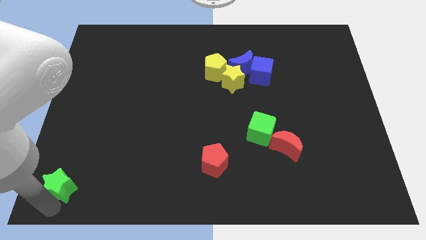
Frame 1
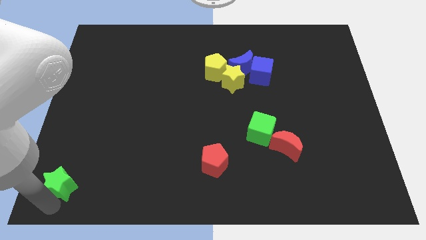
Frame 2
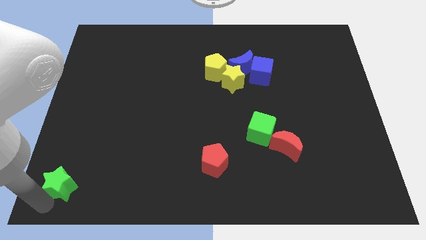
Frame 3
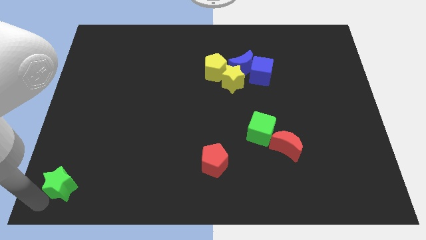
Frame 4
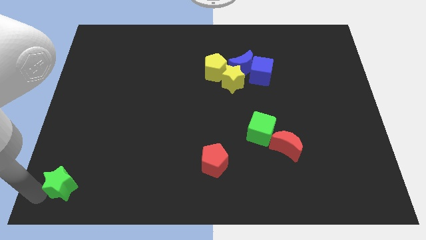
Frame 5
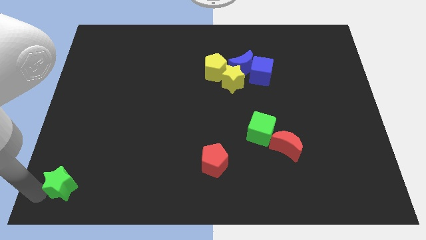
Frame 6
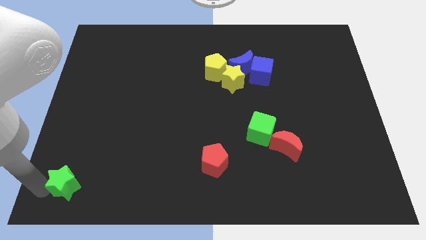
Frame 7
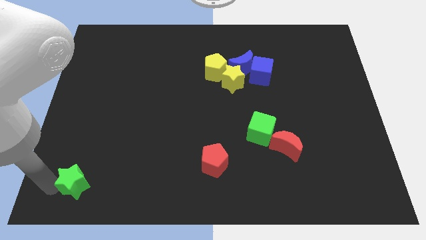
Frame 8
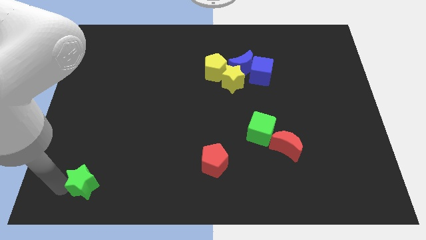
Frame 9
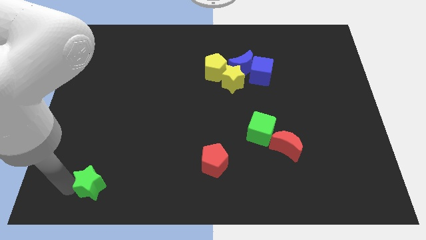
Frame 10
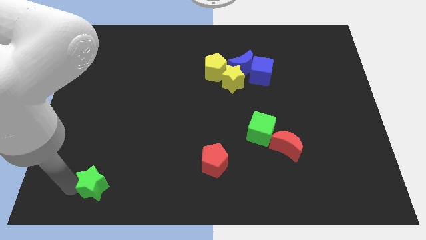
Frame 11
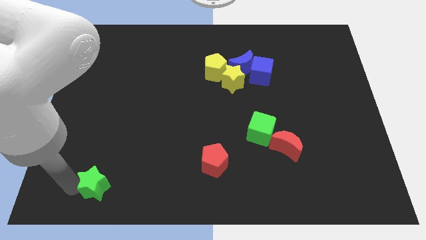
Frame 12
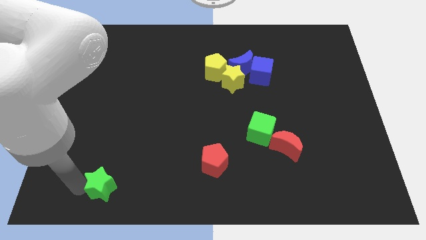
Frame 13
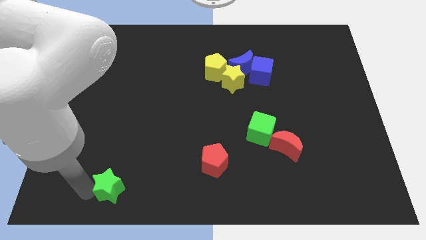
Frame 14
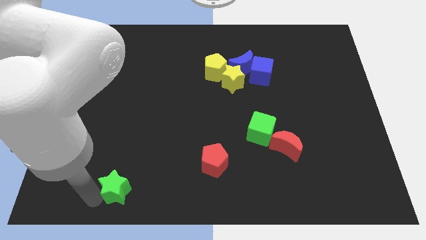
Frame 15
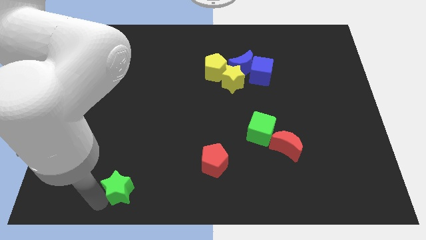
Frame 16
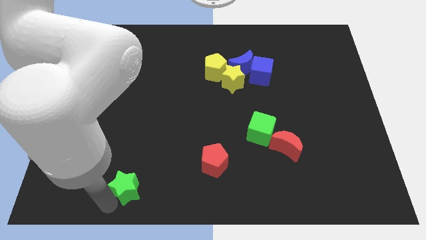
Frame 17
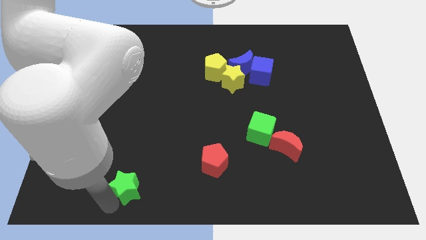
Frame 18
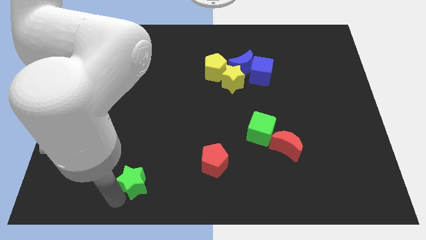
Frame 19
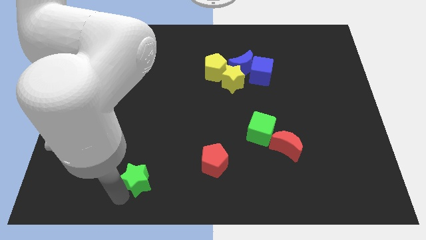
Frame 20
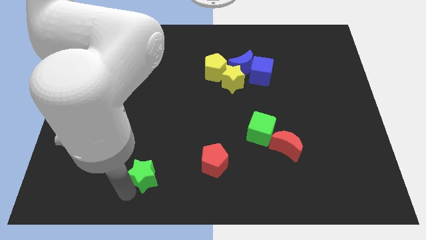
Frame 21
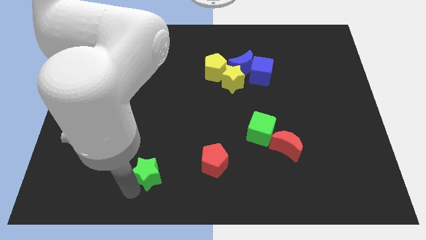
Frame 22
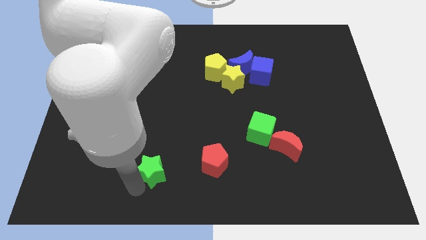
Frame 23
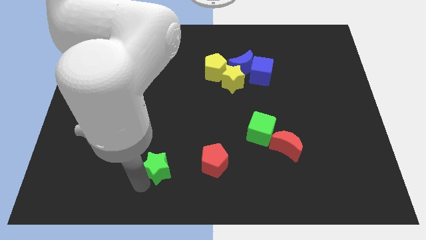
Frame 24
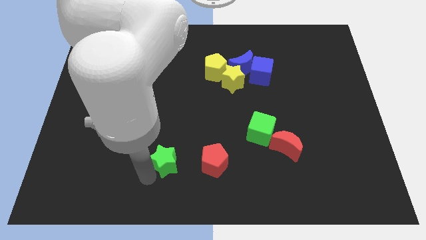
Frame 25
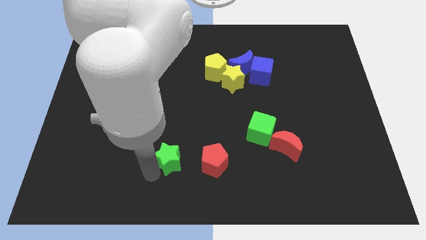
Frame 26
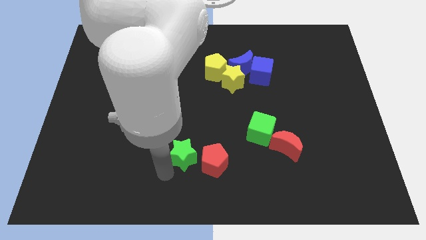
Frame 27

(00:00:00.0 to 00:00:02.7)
move green star to the left of red pentagon

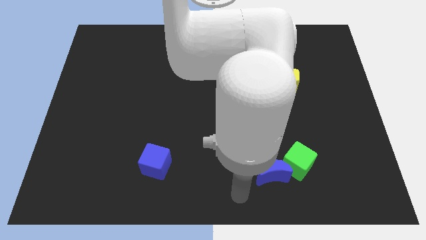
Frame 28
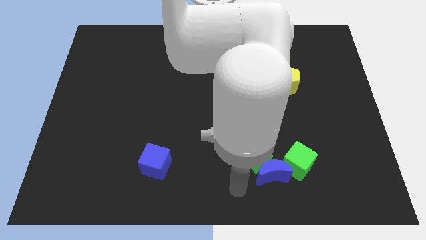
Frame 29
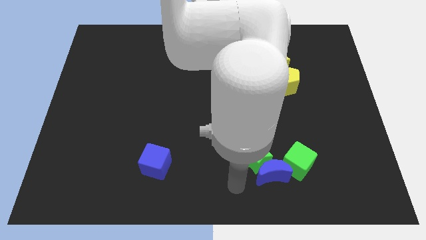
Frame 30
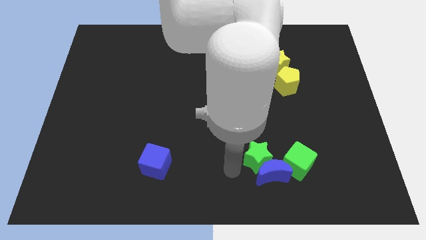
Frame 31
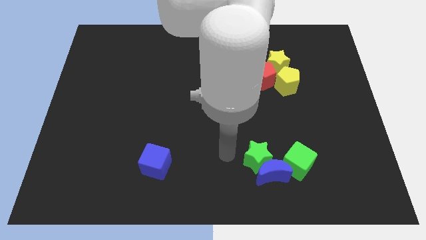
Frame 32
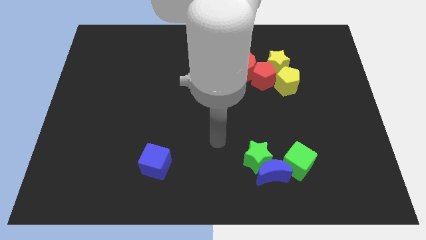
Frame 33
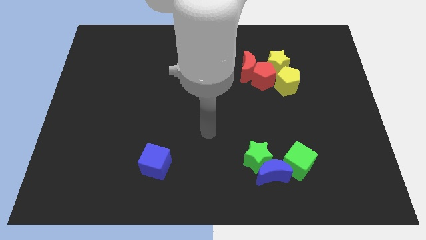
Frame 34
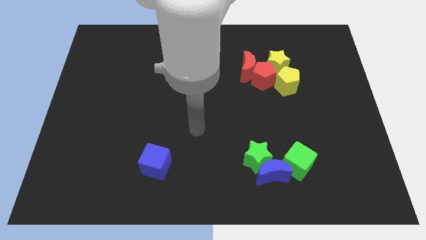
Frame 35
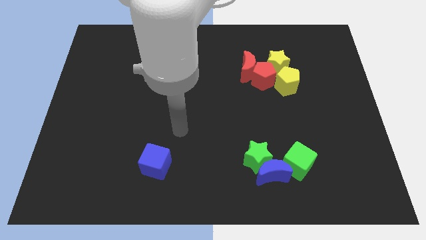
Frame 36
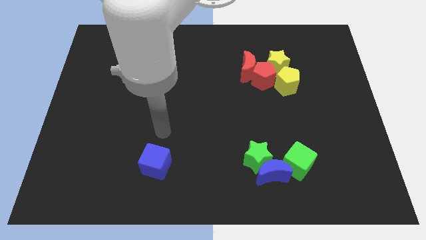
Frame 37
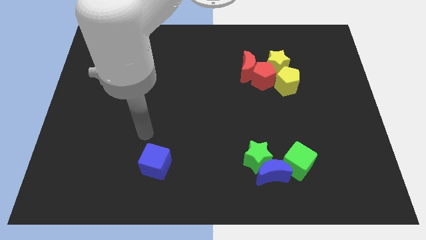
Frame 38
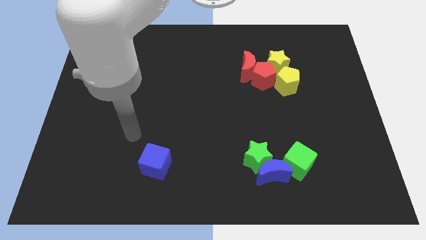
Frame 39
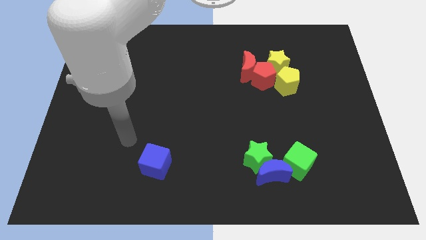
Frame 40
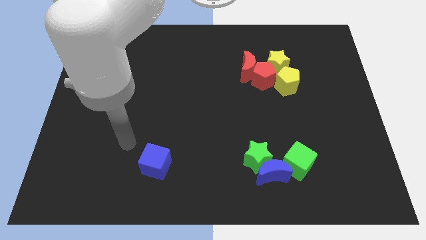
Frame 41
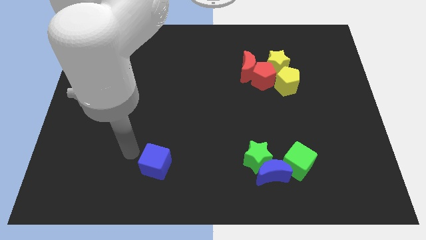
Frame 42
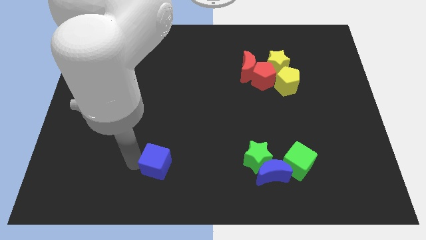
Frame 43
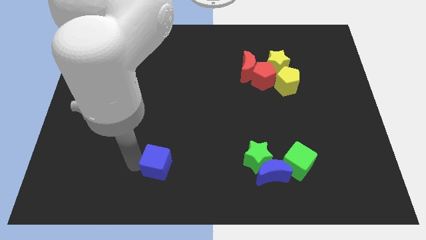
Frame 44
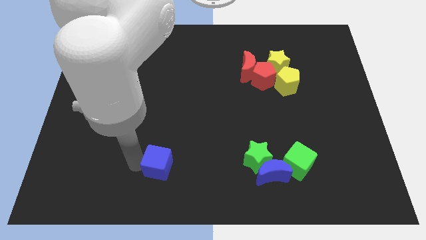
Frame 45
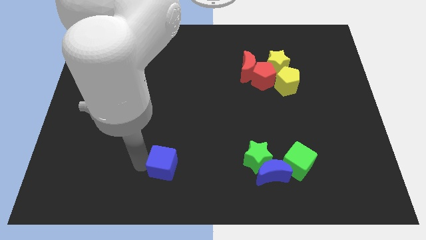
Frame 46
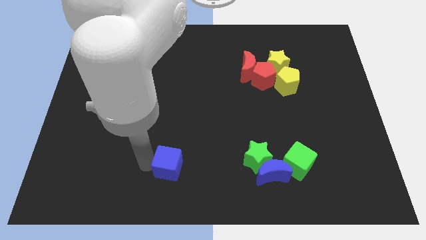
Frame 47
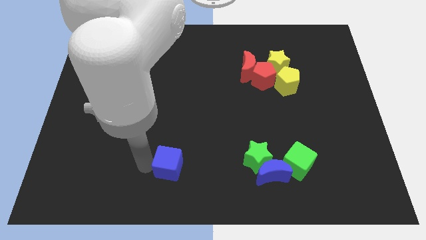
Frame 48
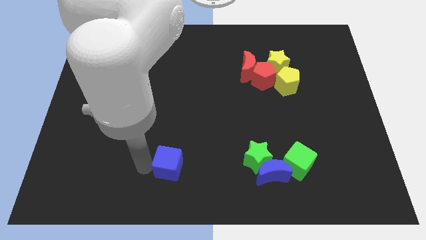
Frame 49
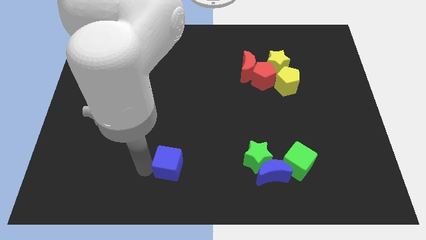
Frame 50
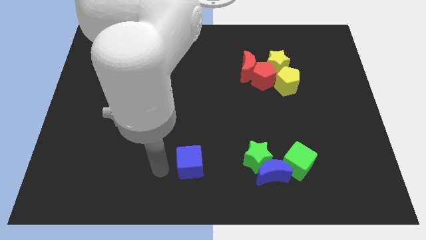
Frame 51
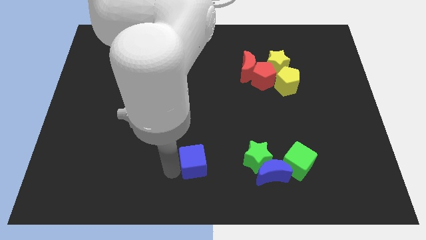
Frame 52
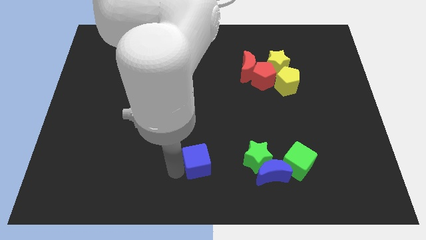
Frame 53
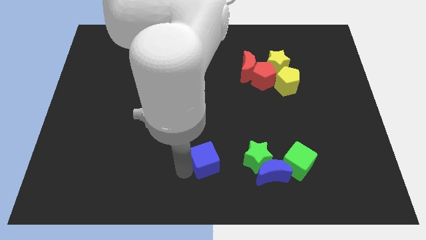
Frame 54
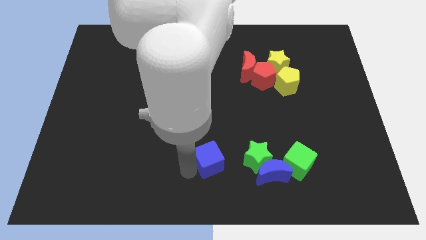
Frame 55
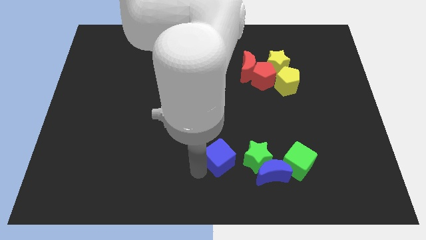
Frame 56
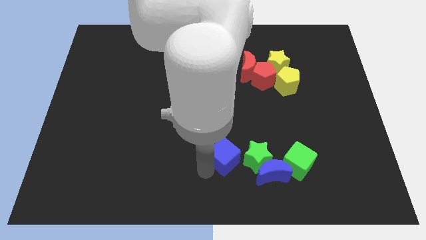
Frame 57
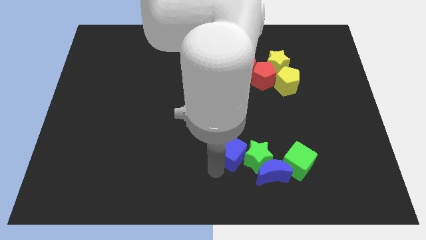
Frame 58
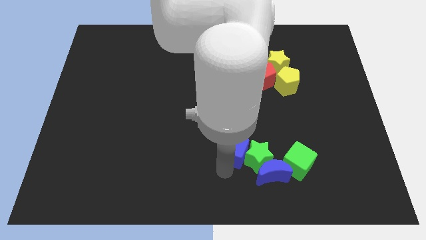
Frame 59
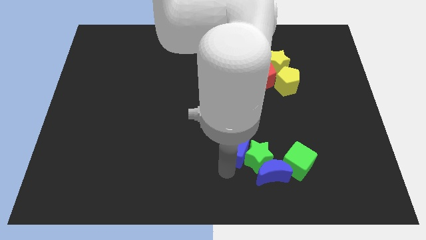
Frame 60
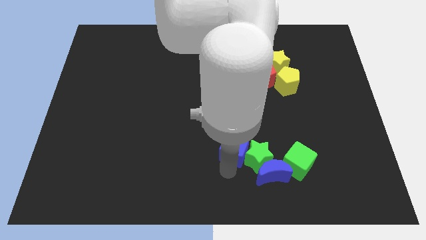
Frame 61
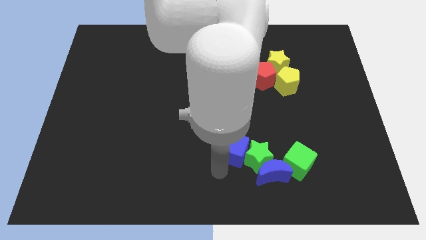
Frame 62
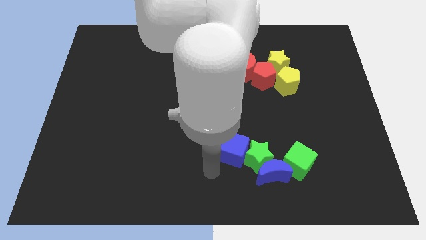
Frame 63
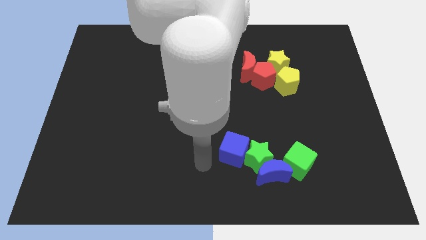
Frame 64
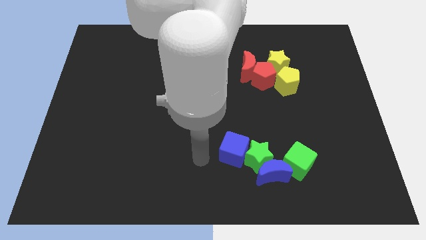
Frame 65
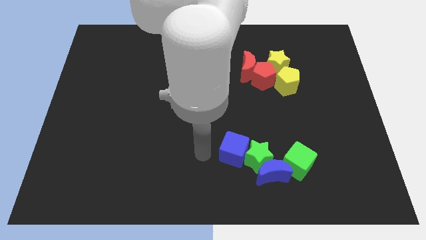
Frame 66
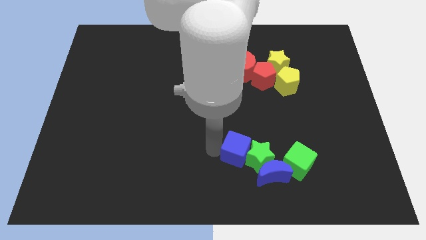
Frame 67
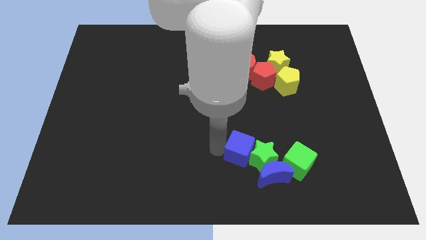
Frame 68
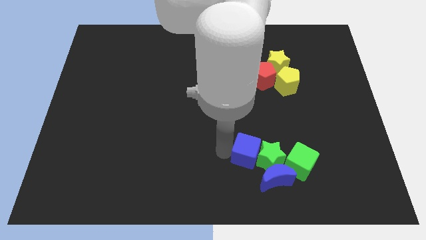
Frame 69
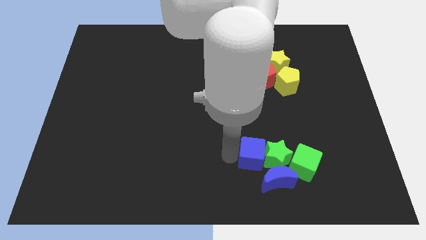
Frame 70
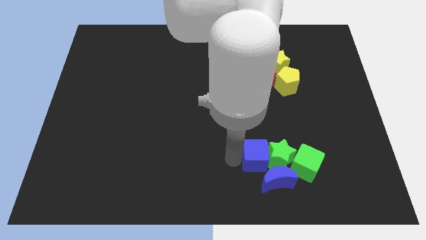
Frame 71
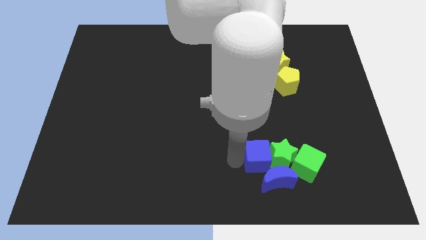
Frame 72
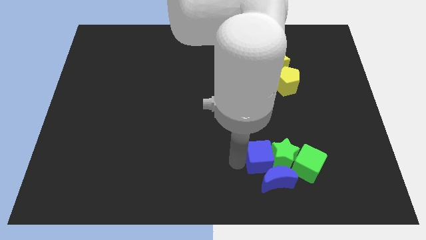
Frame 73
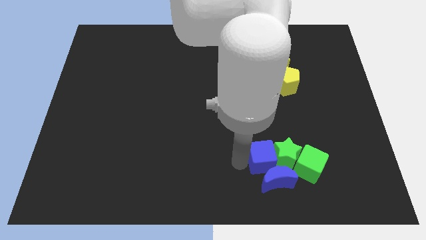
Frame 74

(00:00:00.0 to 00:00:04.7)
move the blue cube left to the green star

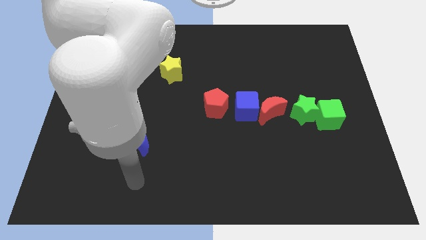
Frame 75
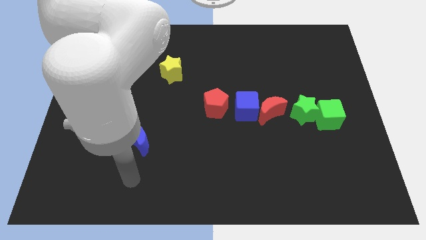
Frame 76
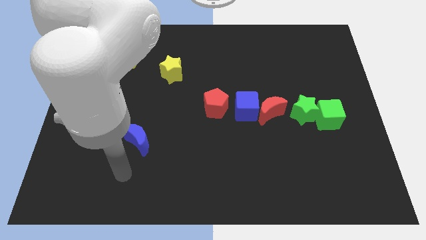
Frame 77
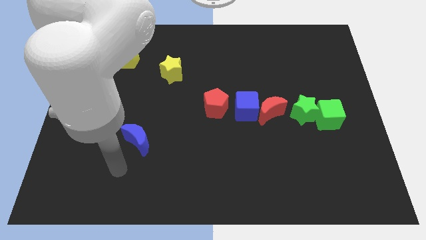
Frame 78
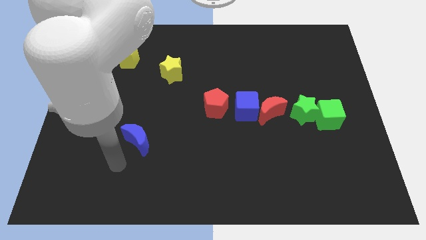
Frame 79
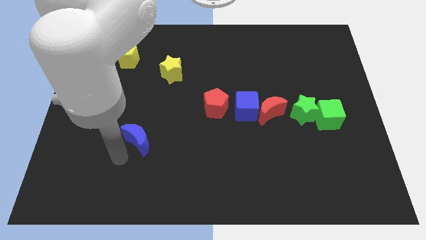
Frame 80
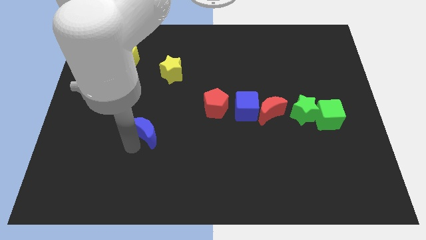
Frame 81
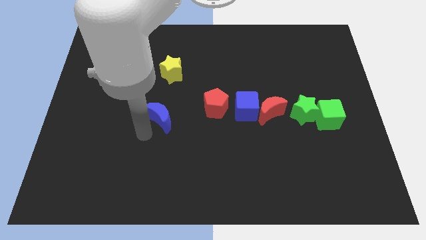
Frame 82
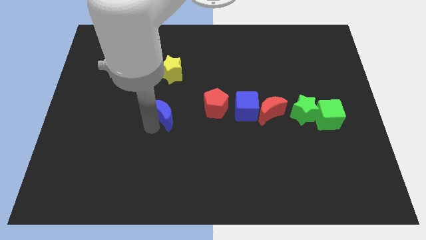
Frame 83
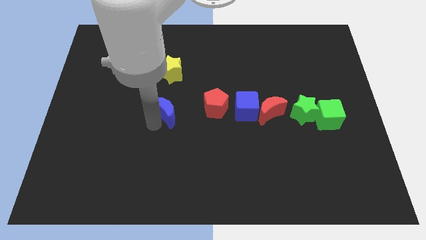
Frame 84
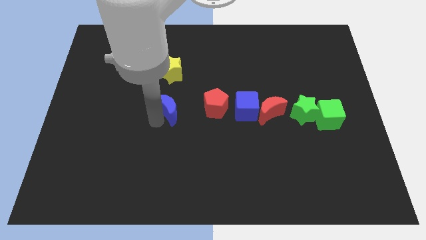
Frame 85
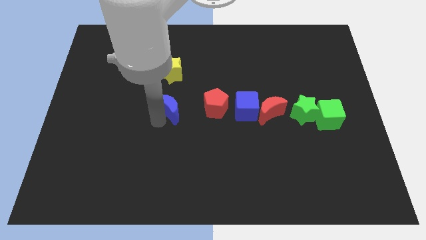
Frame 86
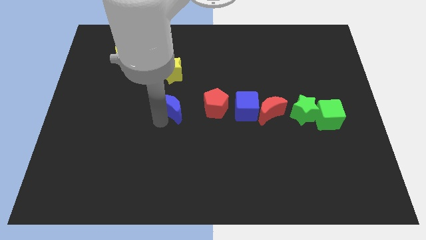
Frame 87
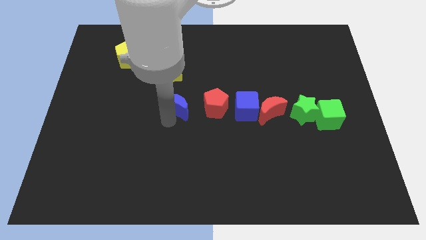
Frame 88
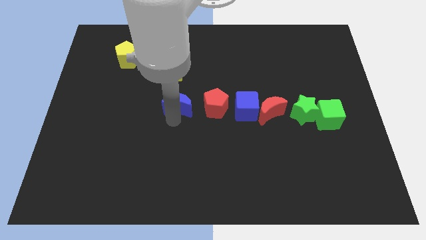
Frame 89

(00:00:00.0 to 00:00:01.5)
move the blue moon below the yellow star

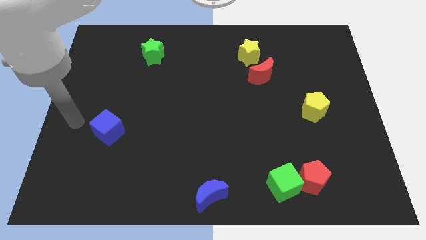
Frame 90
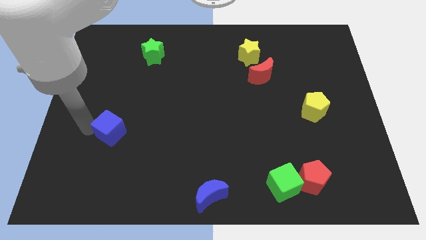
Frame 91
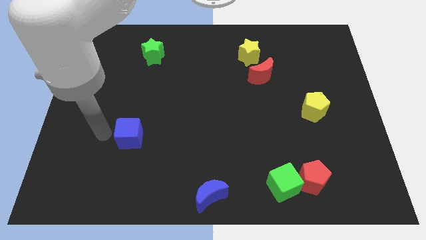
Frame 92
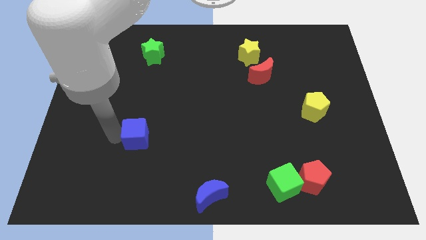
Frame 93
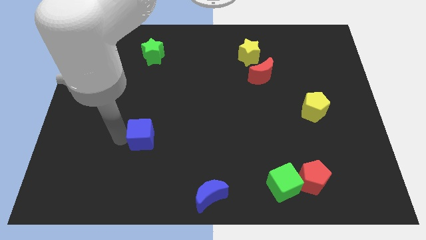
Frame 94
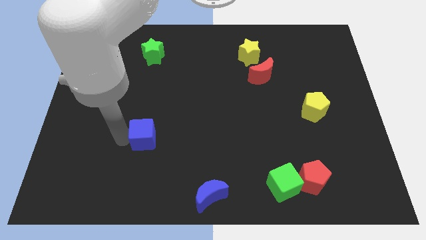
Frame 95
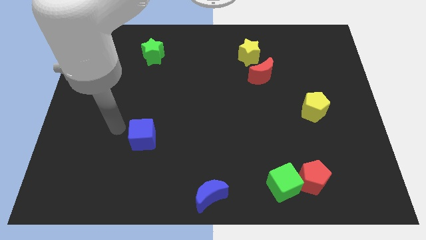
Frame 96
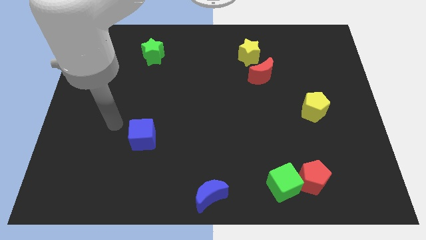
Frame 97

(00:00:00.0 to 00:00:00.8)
push the blue cube to the right of the board
